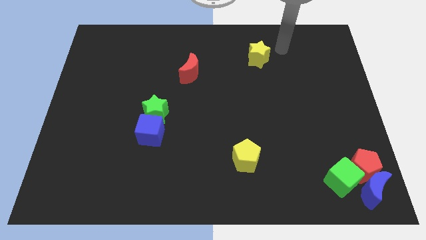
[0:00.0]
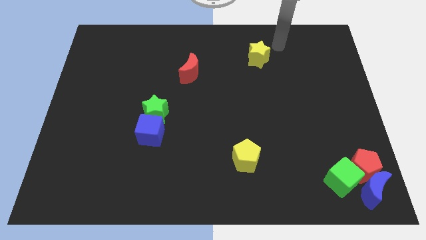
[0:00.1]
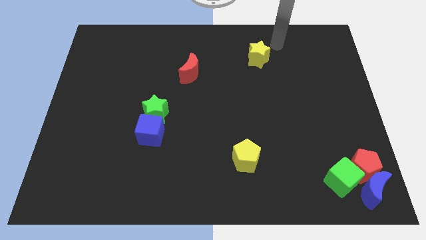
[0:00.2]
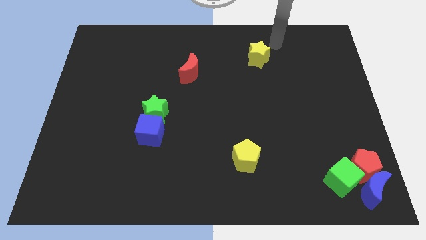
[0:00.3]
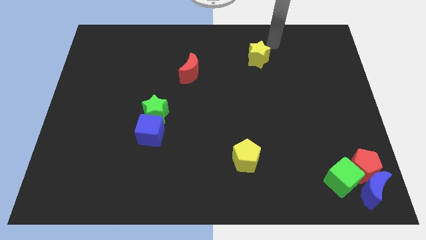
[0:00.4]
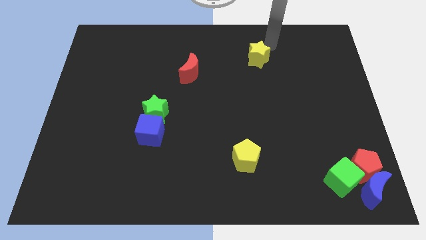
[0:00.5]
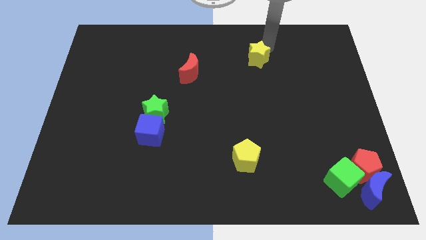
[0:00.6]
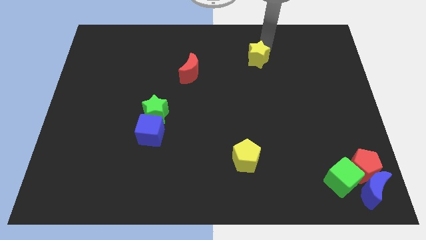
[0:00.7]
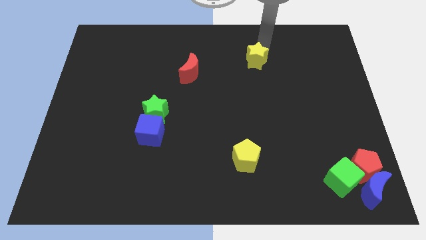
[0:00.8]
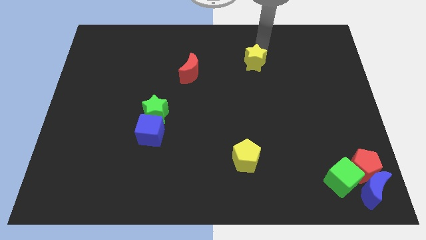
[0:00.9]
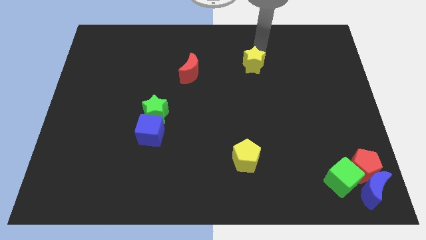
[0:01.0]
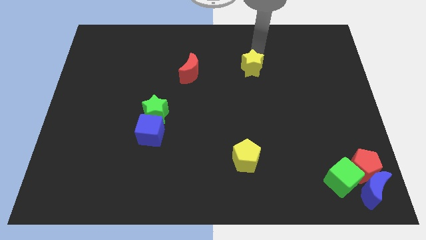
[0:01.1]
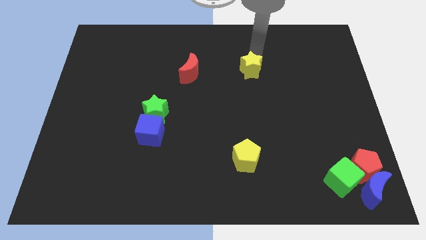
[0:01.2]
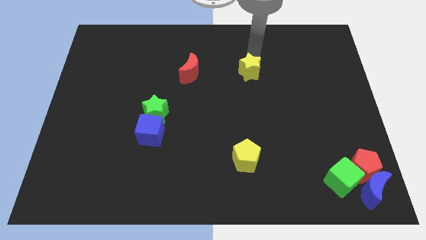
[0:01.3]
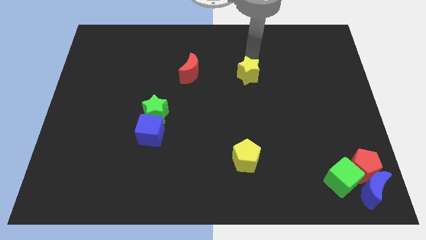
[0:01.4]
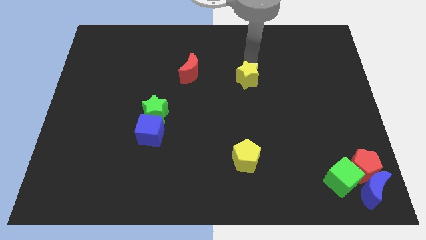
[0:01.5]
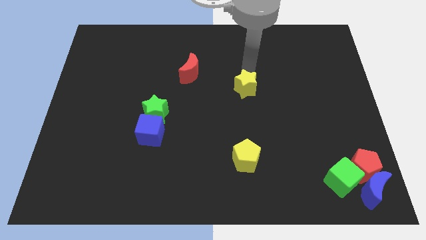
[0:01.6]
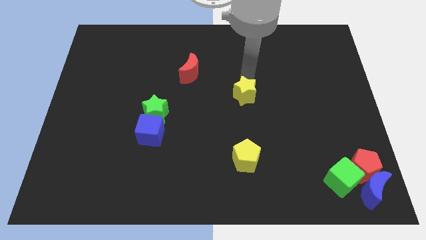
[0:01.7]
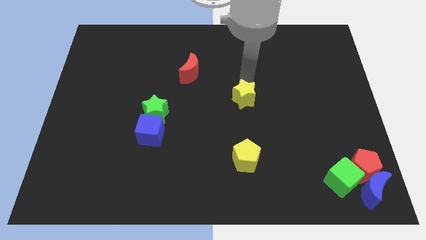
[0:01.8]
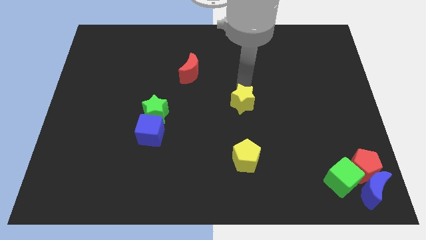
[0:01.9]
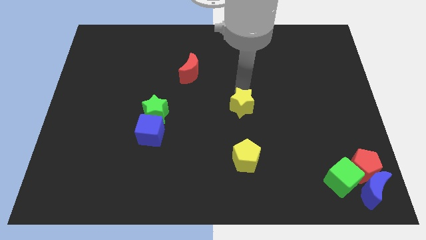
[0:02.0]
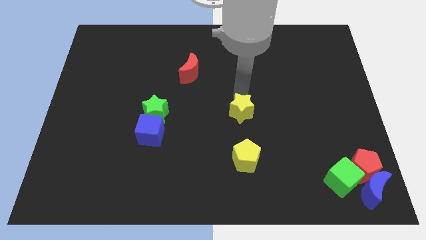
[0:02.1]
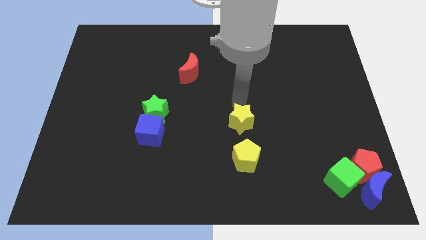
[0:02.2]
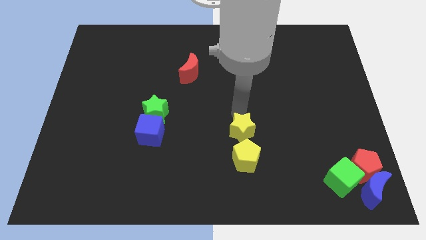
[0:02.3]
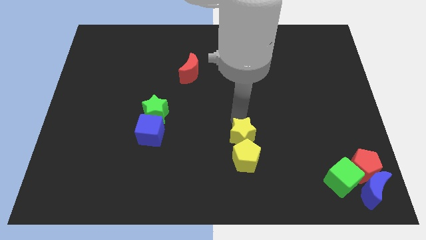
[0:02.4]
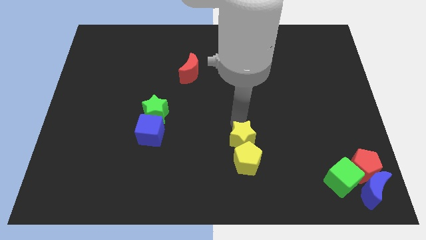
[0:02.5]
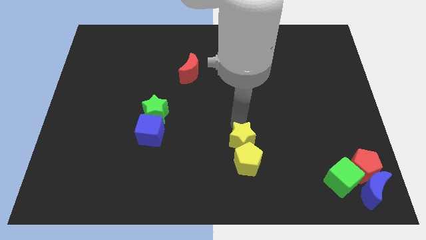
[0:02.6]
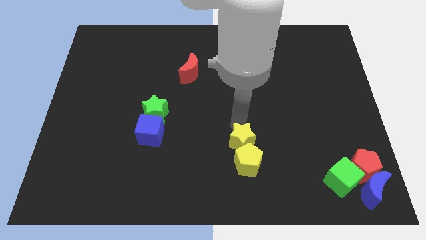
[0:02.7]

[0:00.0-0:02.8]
move yellow star into top of the yellow pentagon

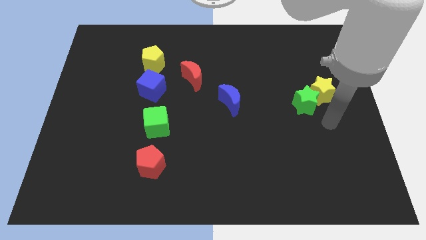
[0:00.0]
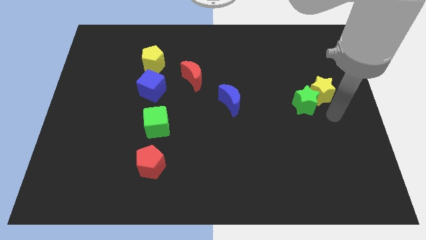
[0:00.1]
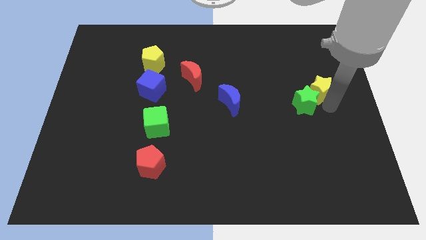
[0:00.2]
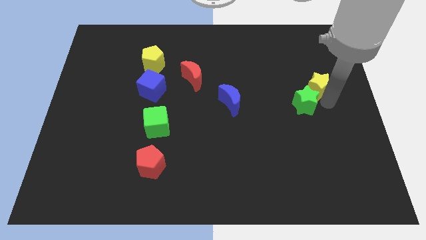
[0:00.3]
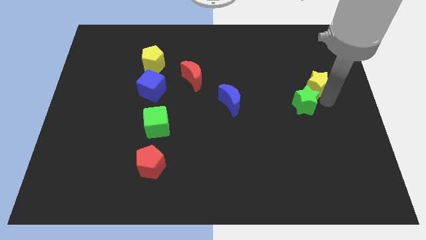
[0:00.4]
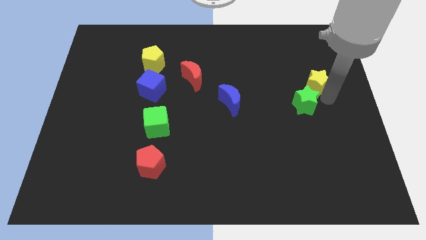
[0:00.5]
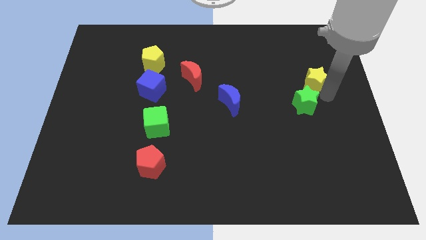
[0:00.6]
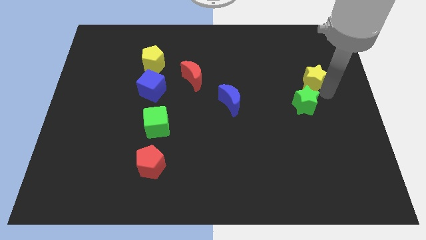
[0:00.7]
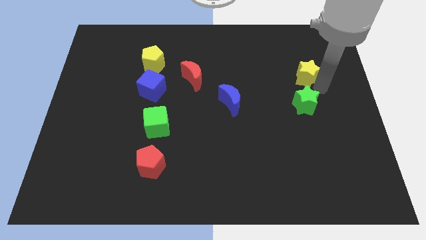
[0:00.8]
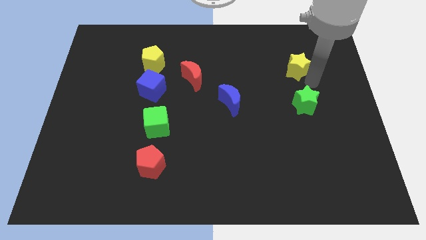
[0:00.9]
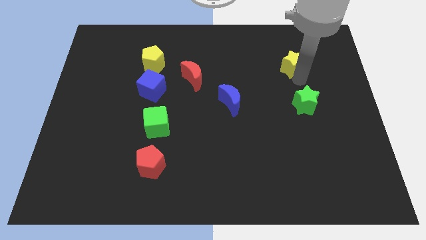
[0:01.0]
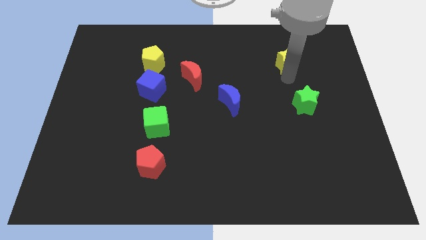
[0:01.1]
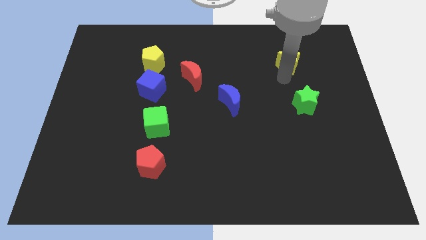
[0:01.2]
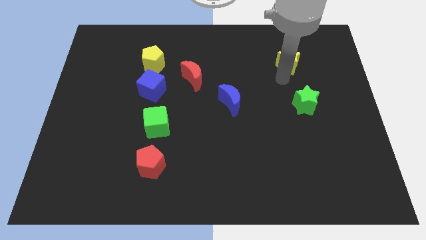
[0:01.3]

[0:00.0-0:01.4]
separate the yellow star from the green star

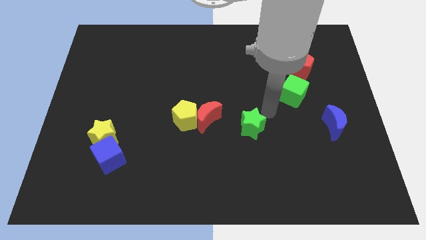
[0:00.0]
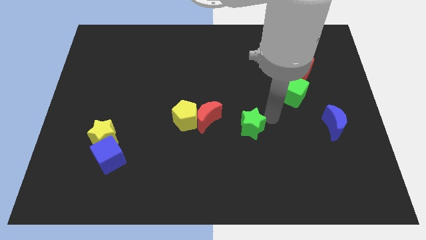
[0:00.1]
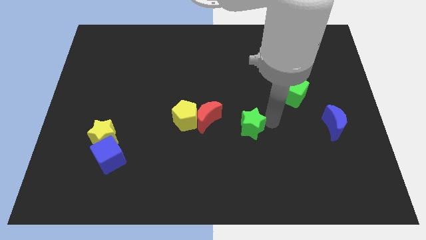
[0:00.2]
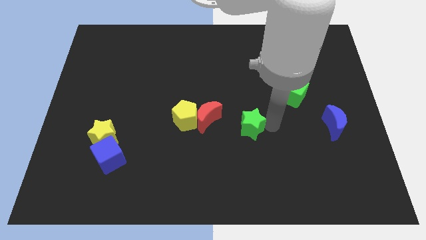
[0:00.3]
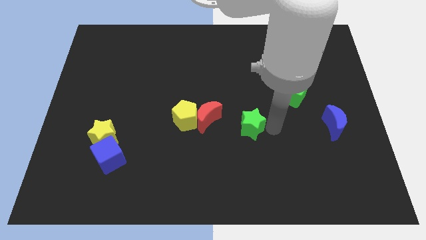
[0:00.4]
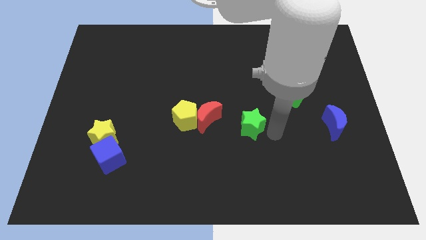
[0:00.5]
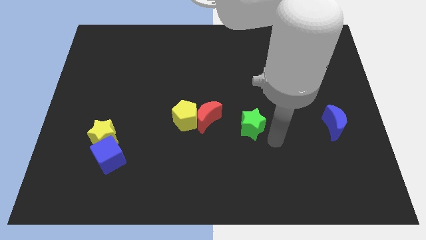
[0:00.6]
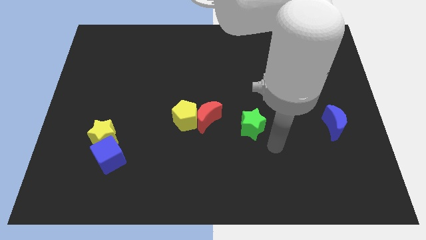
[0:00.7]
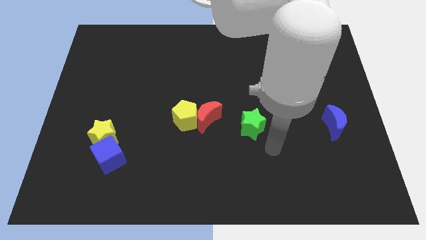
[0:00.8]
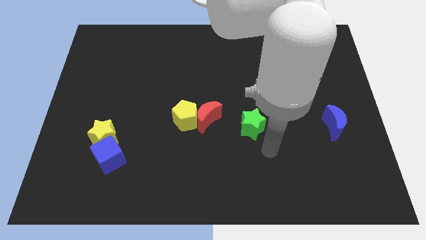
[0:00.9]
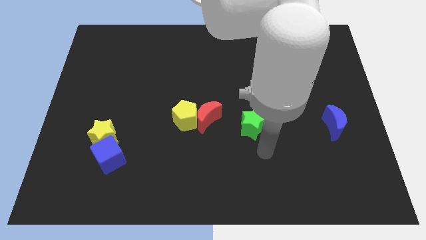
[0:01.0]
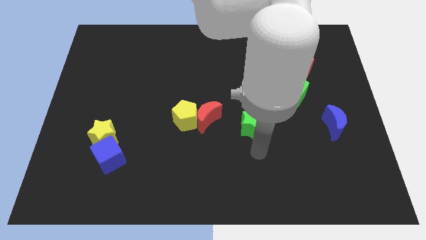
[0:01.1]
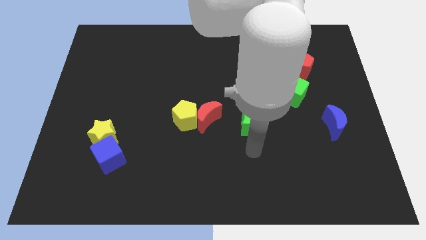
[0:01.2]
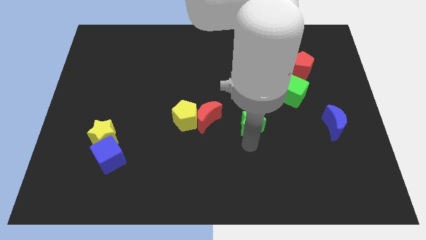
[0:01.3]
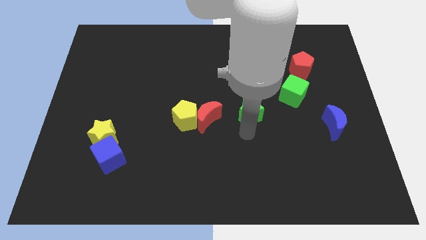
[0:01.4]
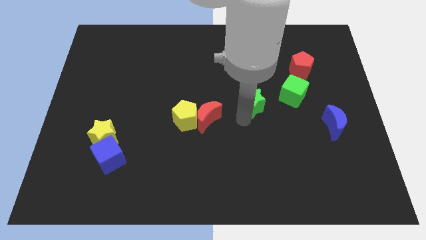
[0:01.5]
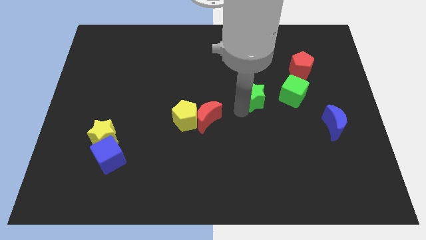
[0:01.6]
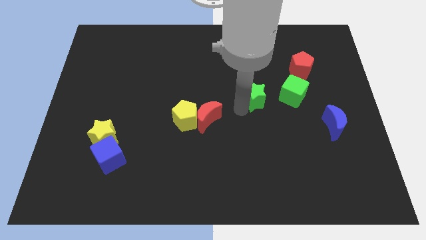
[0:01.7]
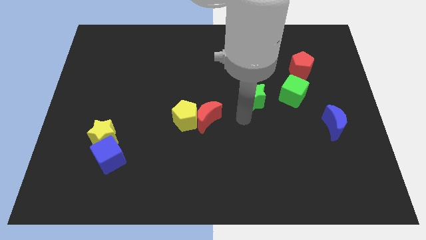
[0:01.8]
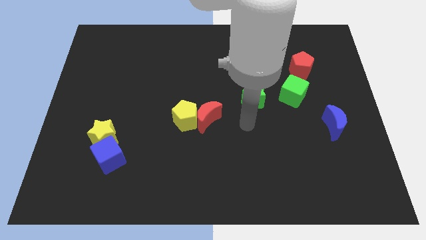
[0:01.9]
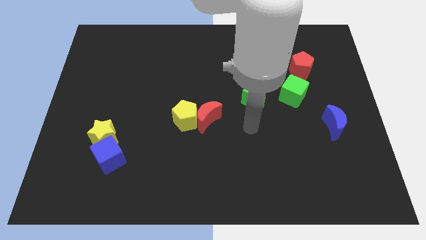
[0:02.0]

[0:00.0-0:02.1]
place the green star to the left of the green cube

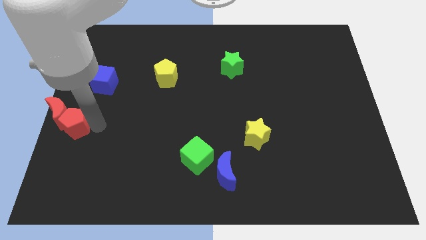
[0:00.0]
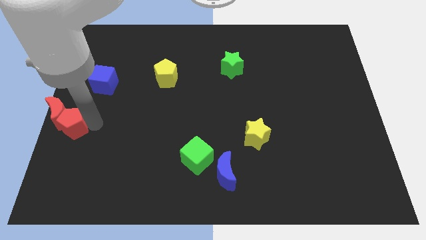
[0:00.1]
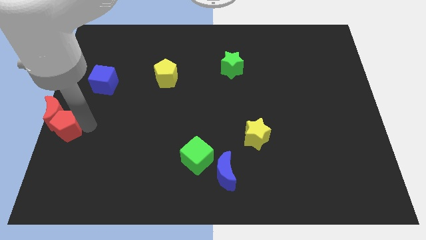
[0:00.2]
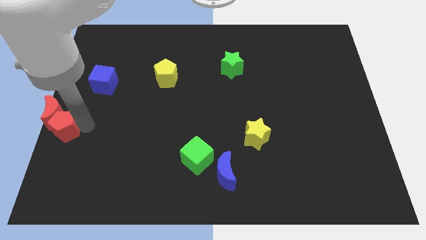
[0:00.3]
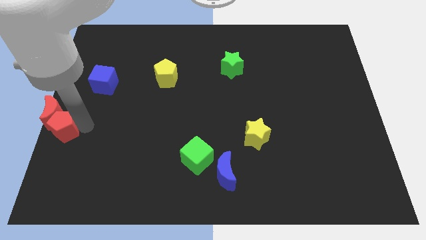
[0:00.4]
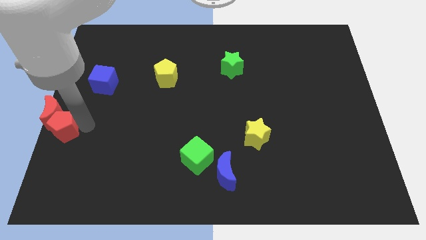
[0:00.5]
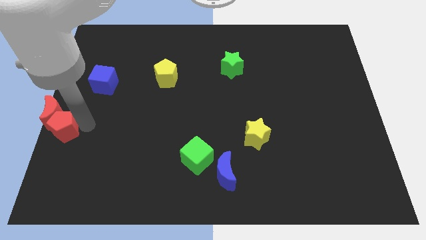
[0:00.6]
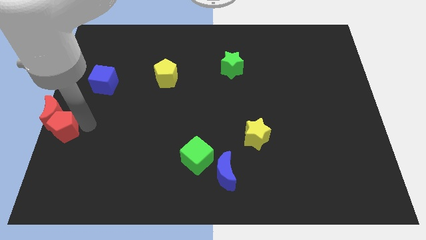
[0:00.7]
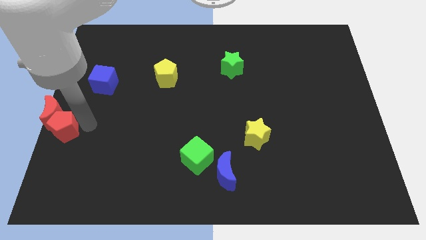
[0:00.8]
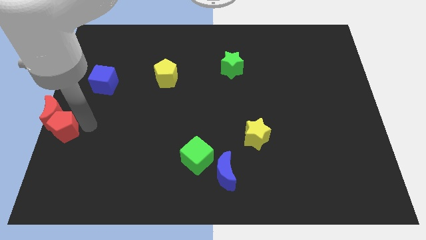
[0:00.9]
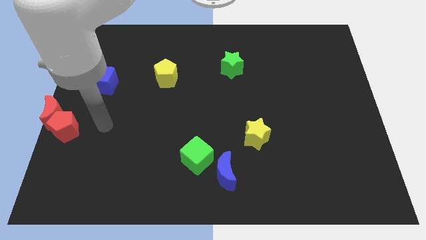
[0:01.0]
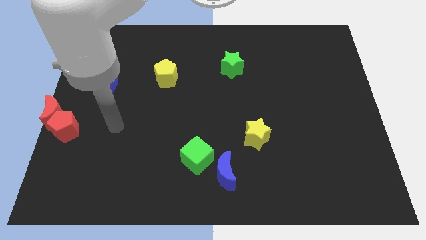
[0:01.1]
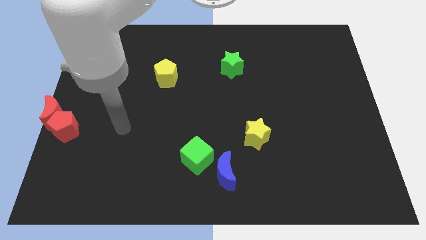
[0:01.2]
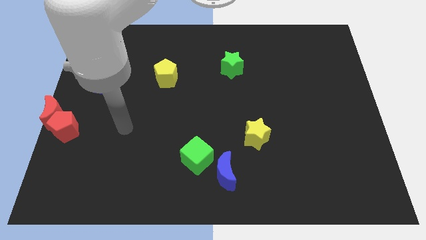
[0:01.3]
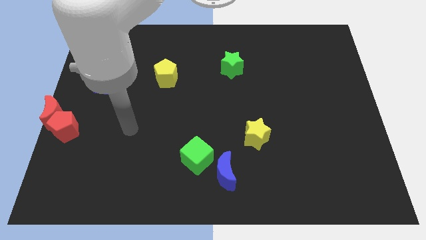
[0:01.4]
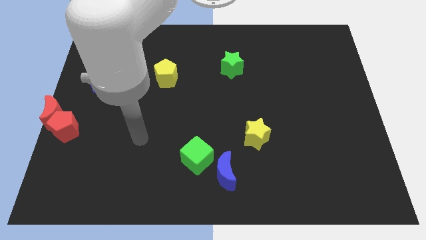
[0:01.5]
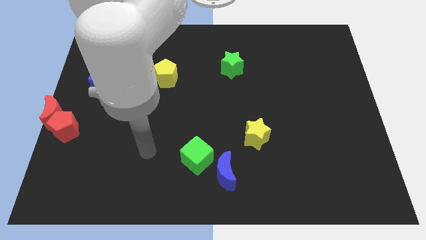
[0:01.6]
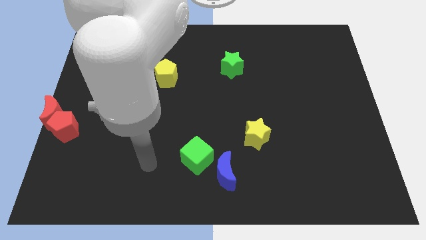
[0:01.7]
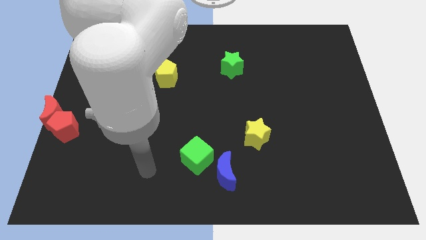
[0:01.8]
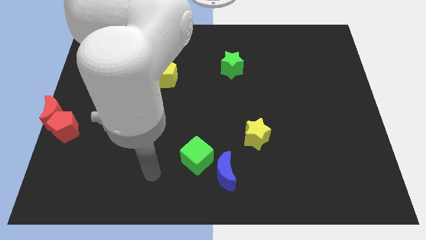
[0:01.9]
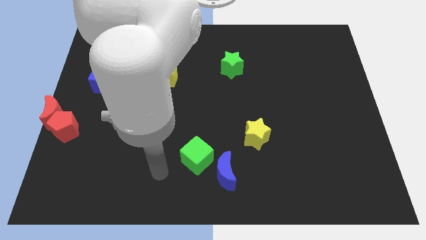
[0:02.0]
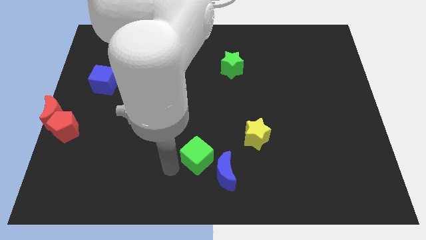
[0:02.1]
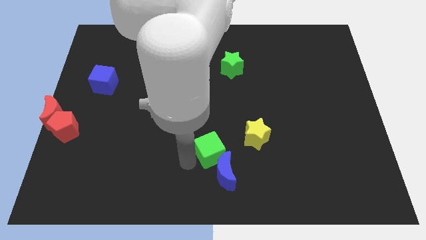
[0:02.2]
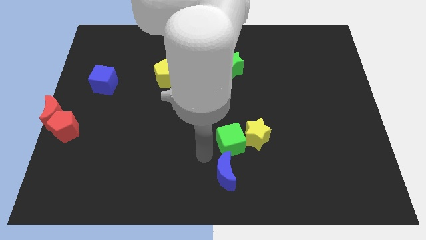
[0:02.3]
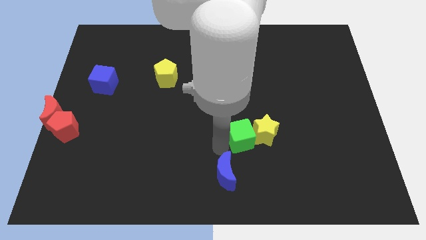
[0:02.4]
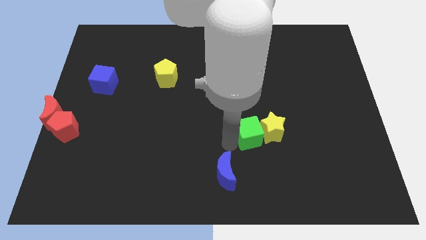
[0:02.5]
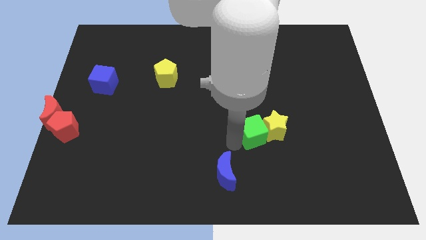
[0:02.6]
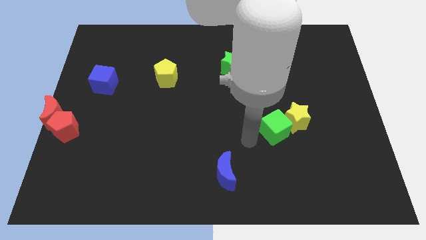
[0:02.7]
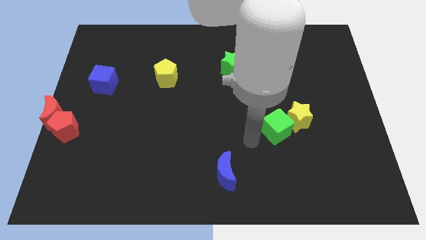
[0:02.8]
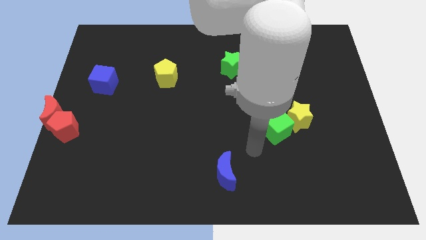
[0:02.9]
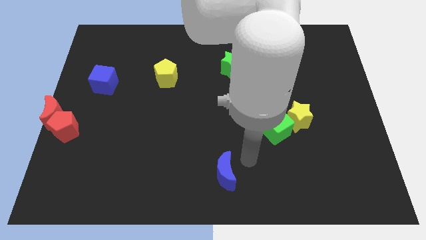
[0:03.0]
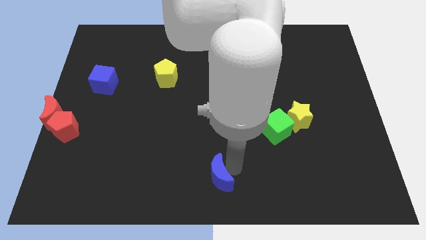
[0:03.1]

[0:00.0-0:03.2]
push the green cube and yellow star towards the right side of the board
